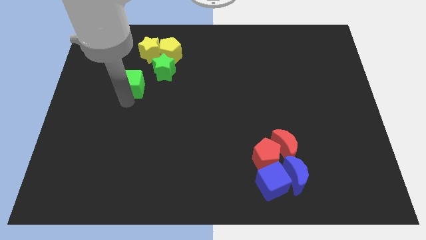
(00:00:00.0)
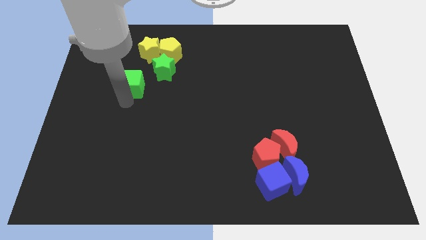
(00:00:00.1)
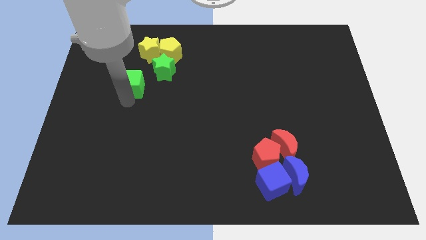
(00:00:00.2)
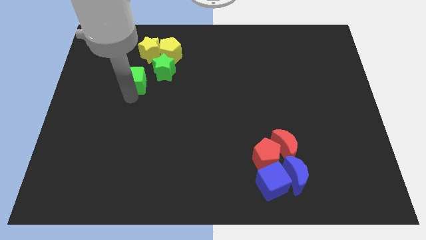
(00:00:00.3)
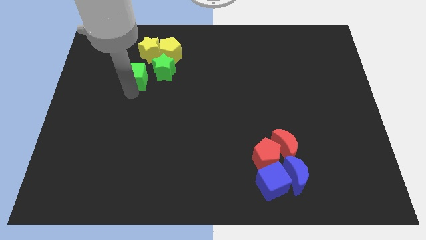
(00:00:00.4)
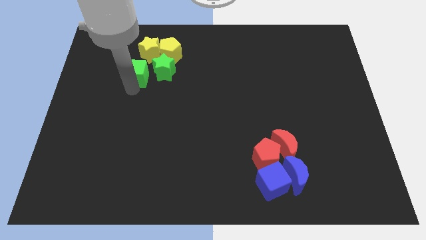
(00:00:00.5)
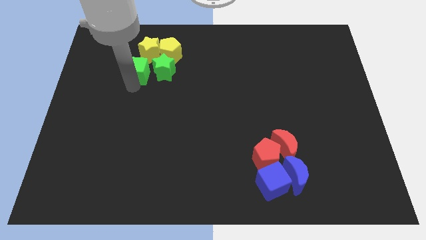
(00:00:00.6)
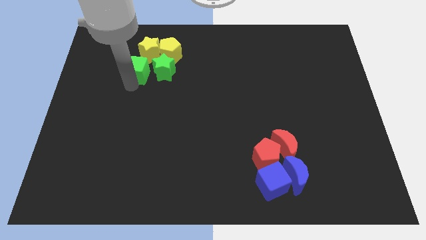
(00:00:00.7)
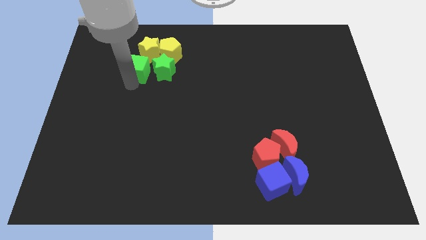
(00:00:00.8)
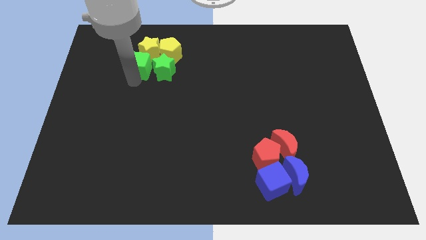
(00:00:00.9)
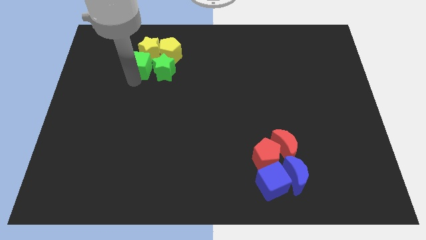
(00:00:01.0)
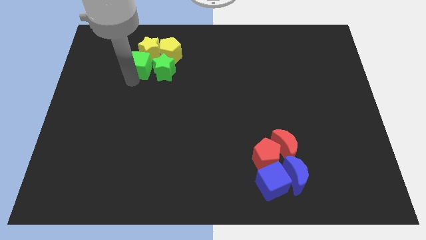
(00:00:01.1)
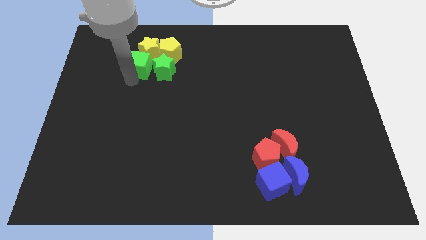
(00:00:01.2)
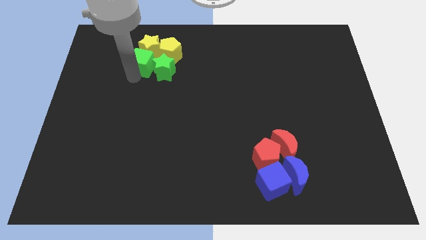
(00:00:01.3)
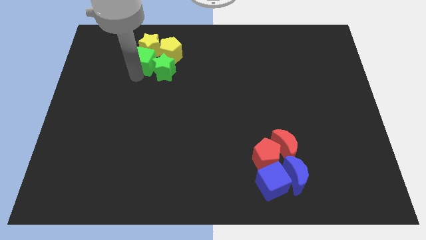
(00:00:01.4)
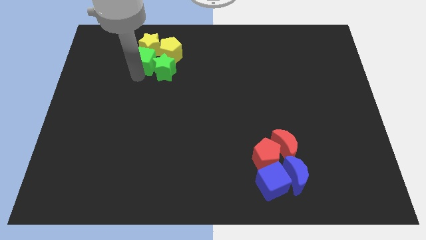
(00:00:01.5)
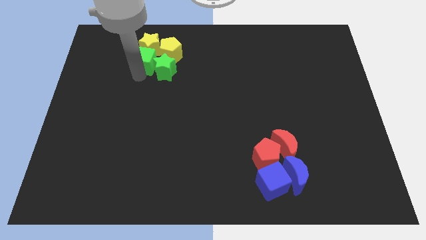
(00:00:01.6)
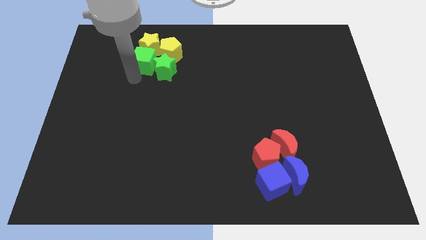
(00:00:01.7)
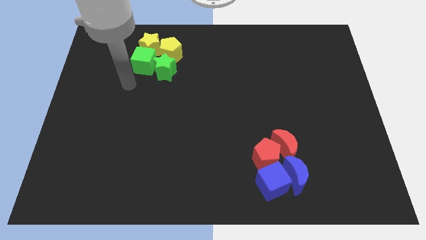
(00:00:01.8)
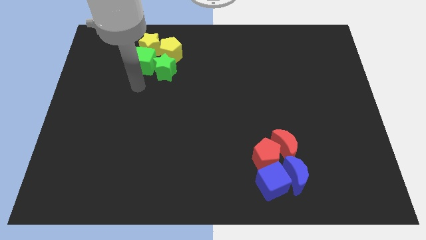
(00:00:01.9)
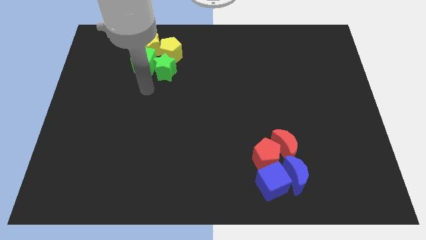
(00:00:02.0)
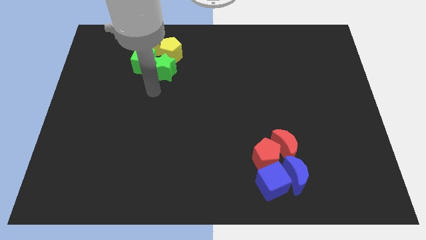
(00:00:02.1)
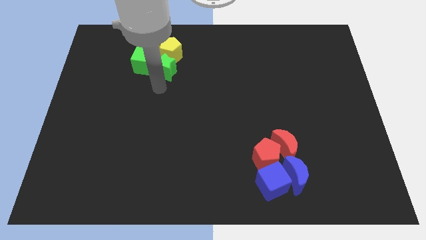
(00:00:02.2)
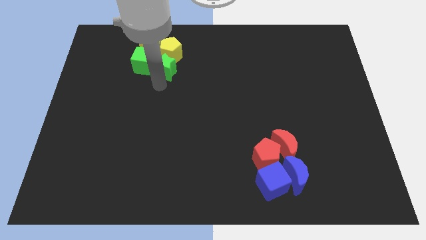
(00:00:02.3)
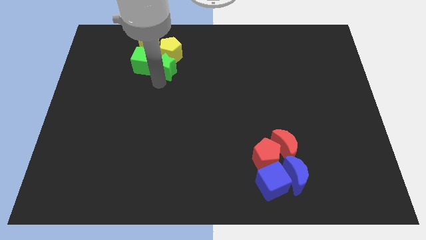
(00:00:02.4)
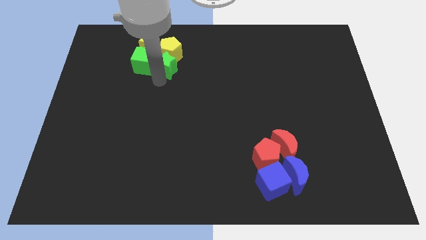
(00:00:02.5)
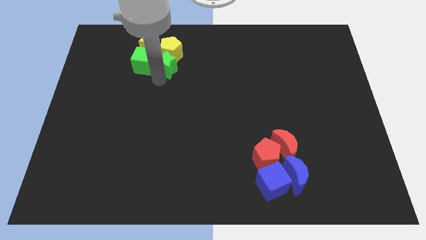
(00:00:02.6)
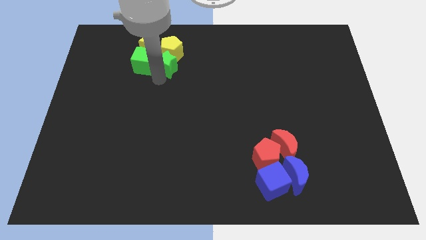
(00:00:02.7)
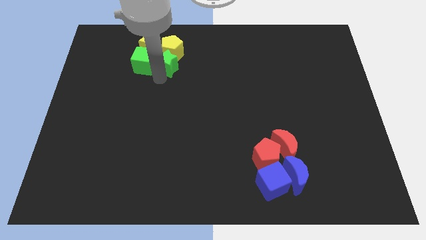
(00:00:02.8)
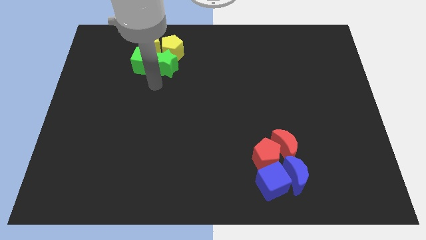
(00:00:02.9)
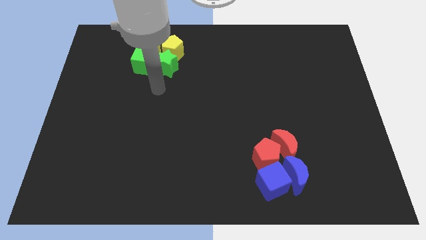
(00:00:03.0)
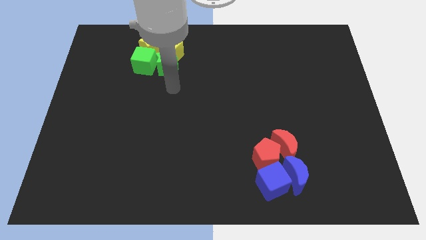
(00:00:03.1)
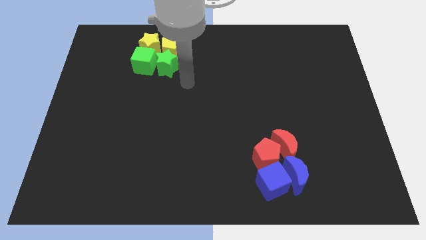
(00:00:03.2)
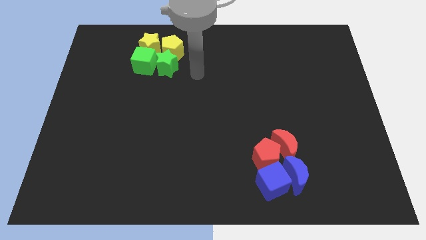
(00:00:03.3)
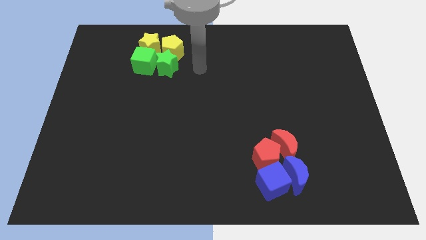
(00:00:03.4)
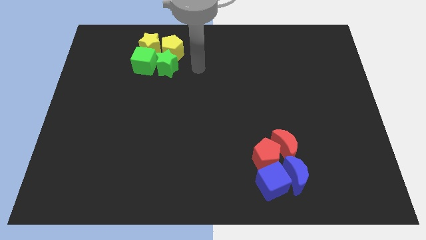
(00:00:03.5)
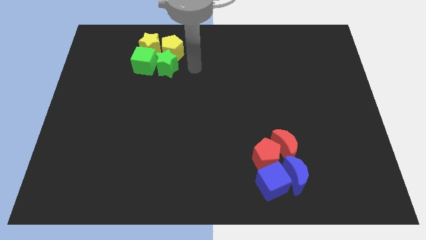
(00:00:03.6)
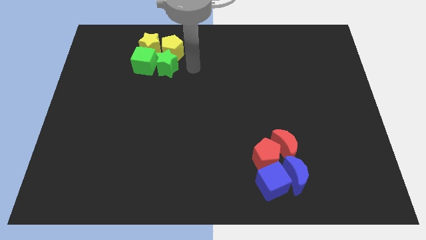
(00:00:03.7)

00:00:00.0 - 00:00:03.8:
move the green blocks into the yellow blocks

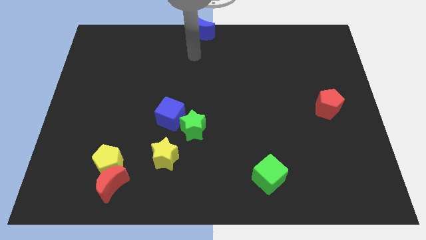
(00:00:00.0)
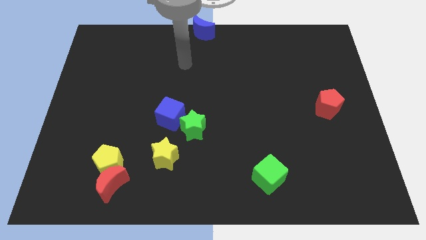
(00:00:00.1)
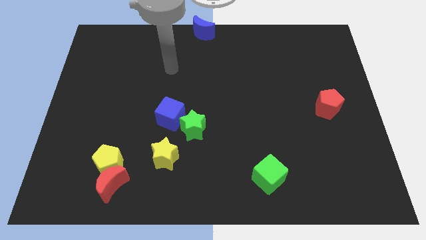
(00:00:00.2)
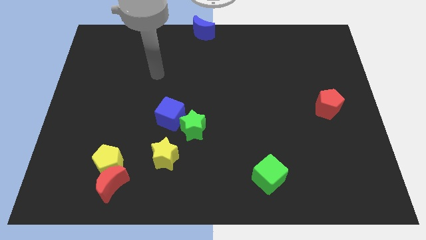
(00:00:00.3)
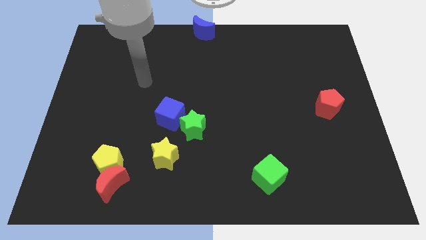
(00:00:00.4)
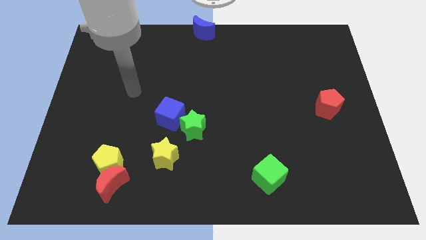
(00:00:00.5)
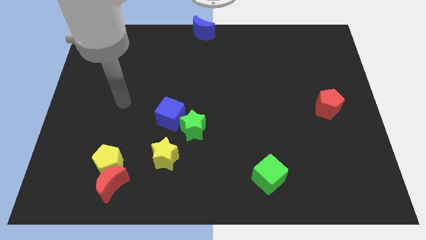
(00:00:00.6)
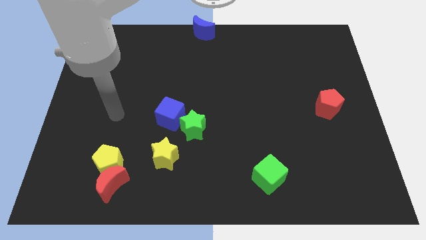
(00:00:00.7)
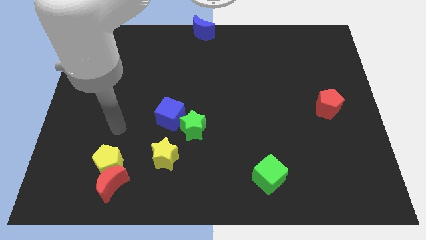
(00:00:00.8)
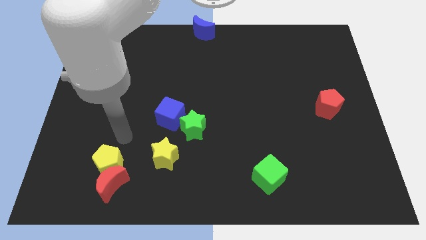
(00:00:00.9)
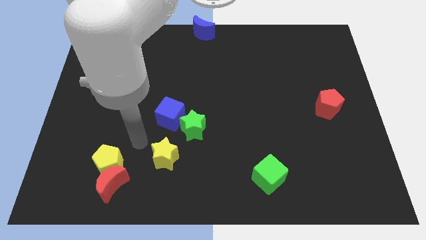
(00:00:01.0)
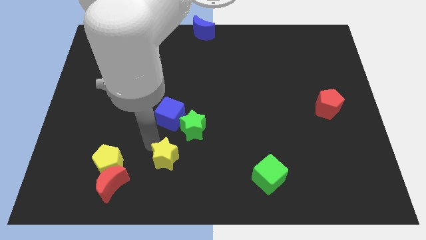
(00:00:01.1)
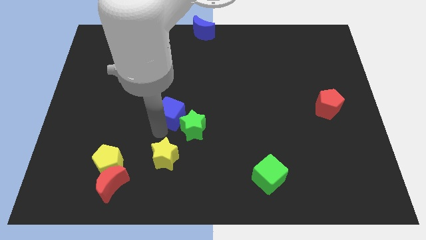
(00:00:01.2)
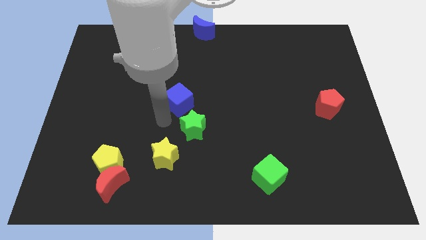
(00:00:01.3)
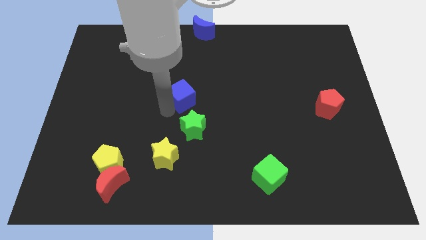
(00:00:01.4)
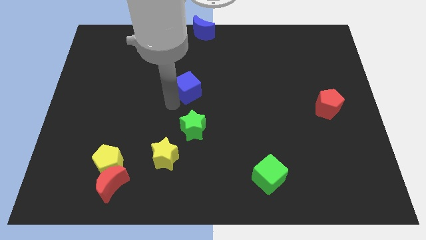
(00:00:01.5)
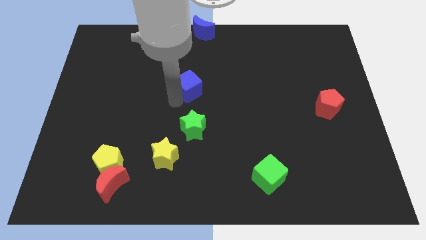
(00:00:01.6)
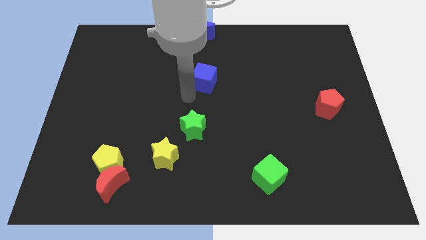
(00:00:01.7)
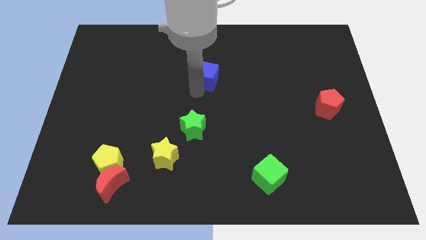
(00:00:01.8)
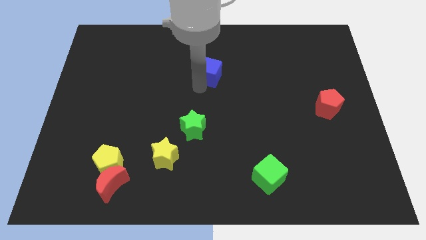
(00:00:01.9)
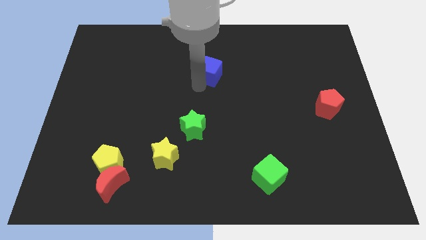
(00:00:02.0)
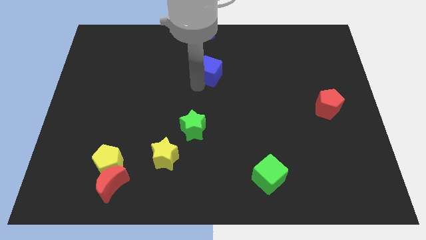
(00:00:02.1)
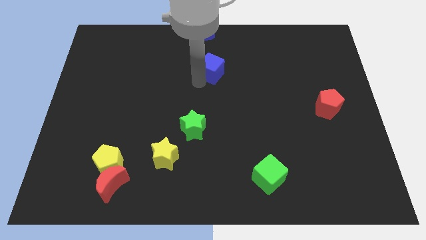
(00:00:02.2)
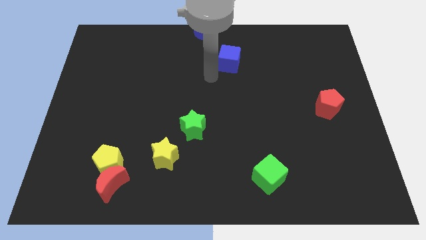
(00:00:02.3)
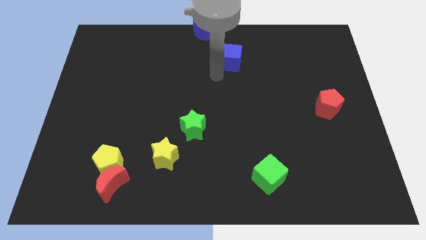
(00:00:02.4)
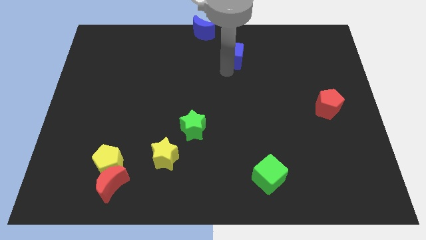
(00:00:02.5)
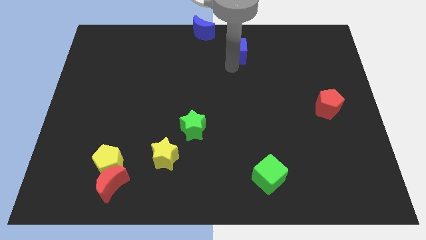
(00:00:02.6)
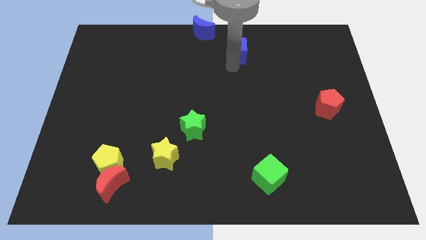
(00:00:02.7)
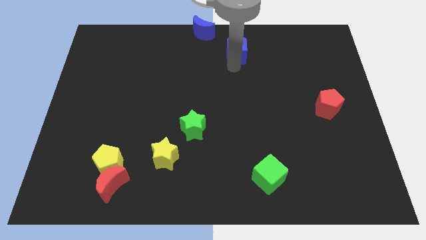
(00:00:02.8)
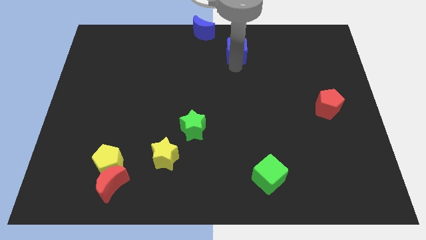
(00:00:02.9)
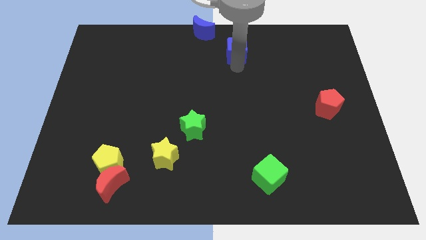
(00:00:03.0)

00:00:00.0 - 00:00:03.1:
place the blue cube at the bottom right side of the blue crescent

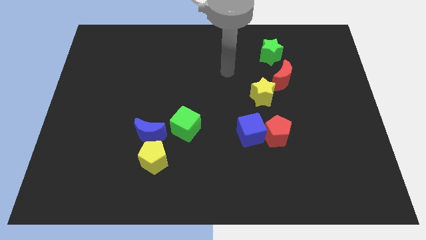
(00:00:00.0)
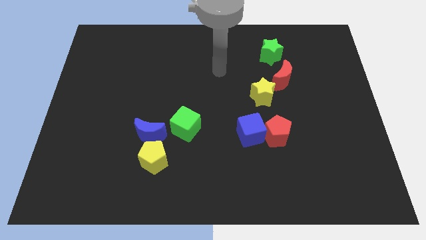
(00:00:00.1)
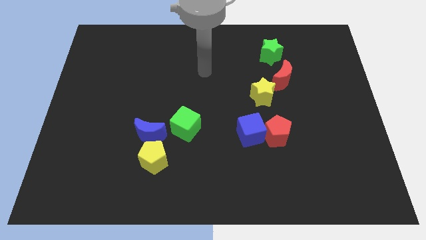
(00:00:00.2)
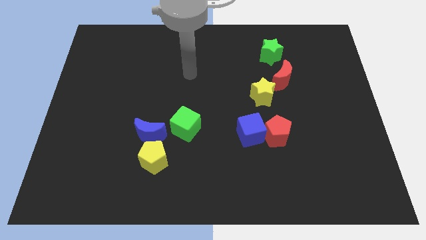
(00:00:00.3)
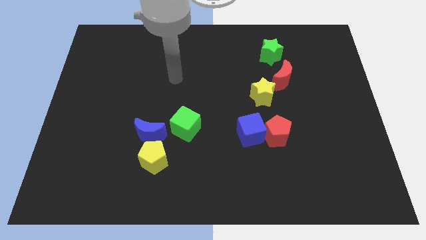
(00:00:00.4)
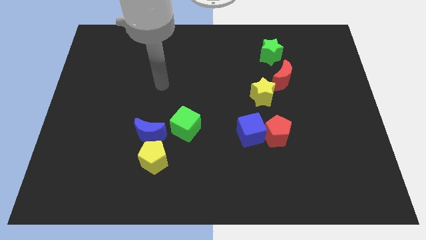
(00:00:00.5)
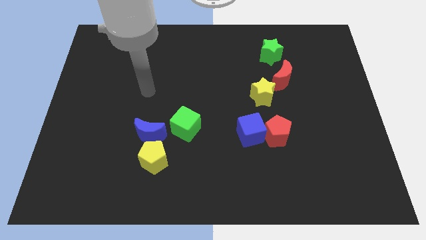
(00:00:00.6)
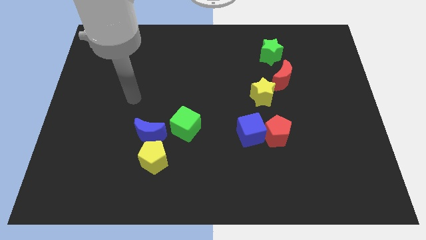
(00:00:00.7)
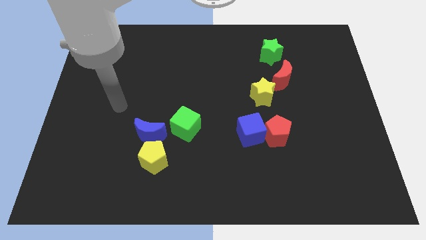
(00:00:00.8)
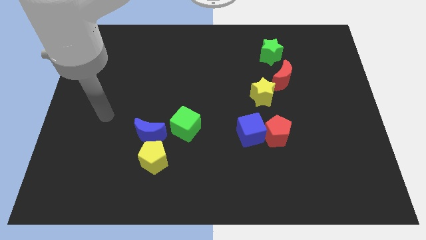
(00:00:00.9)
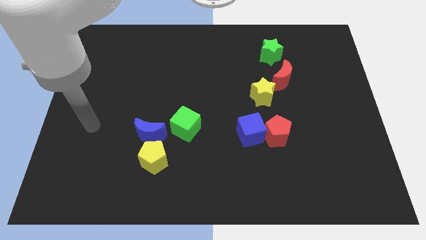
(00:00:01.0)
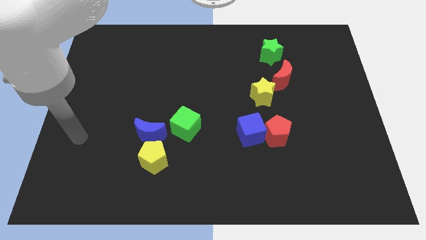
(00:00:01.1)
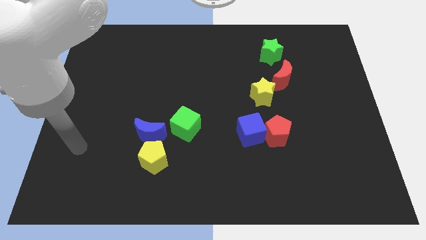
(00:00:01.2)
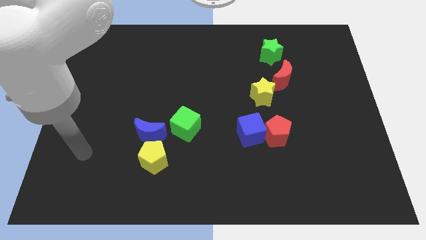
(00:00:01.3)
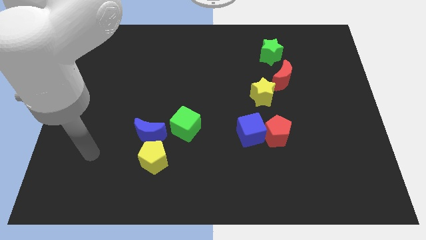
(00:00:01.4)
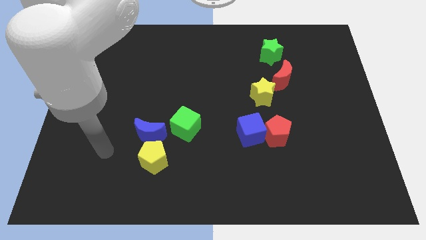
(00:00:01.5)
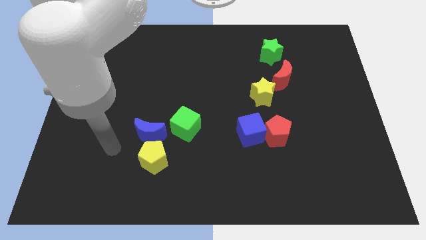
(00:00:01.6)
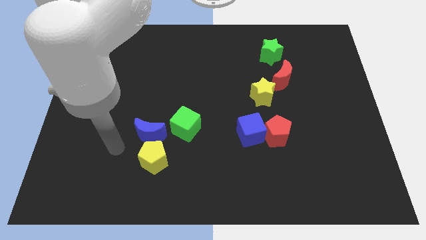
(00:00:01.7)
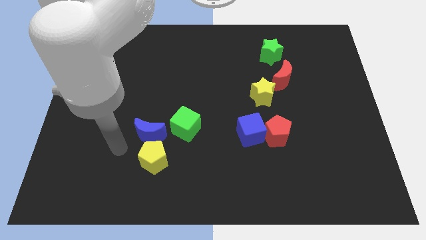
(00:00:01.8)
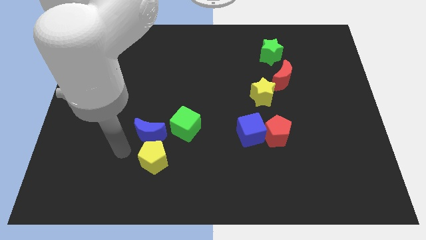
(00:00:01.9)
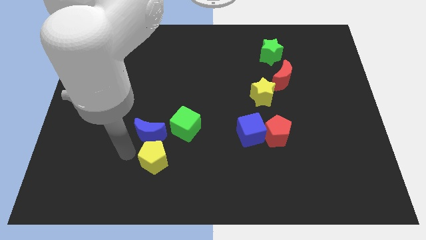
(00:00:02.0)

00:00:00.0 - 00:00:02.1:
place your arm to the left of yellow pentagon
